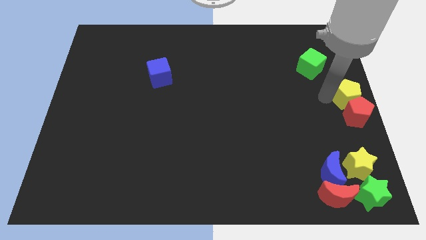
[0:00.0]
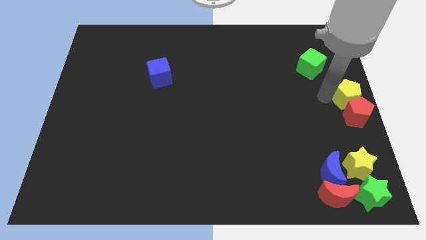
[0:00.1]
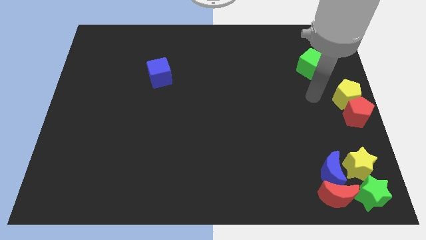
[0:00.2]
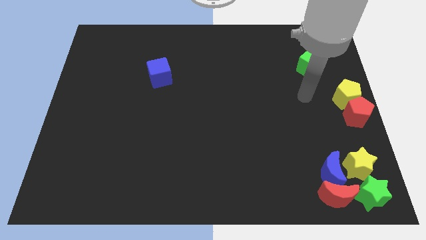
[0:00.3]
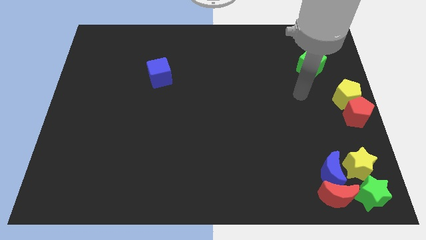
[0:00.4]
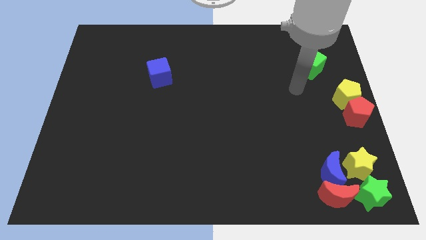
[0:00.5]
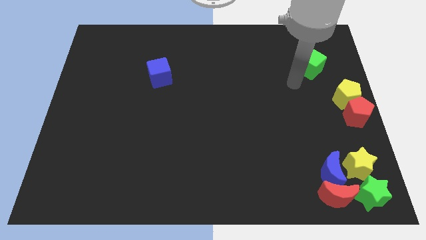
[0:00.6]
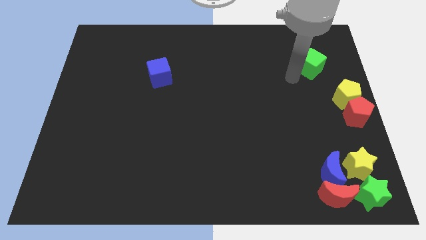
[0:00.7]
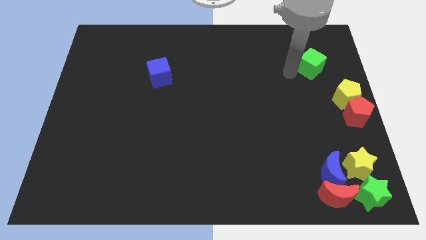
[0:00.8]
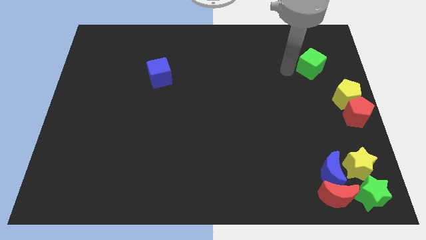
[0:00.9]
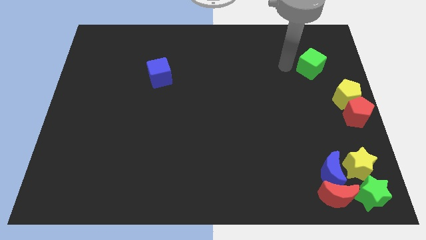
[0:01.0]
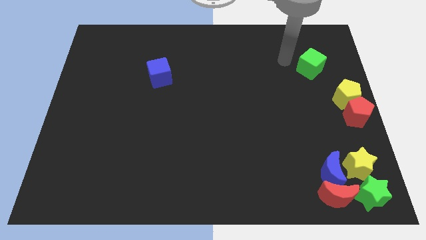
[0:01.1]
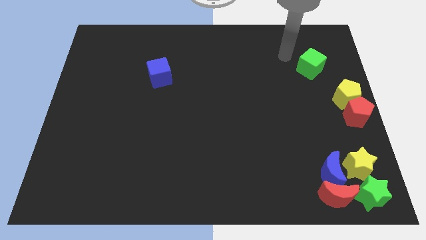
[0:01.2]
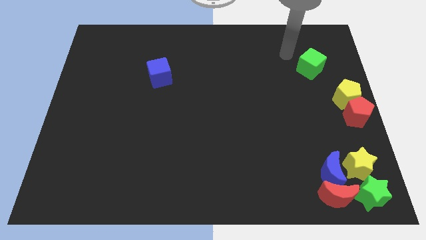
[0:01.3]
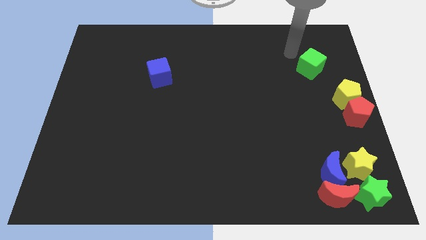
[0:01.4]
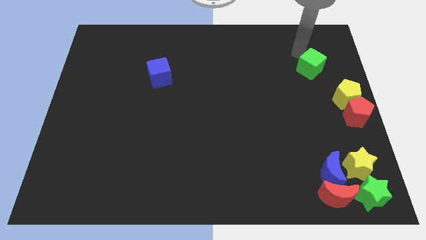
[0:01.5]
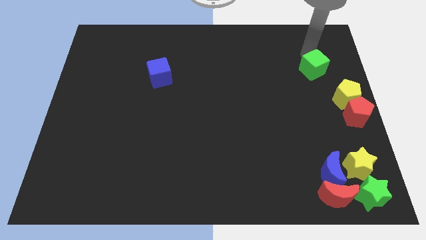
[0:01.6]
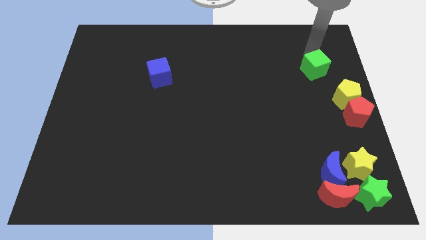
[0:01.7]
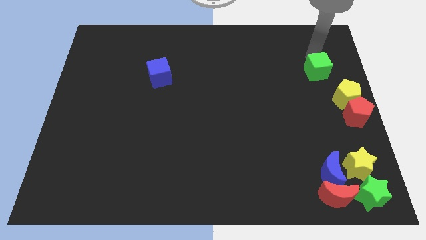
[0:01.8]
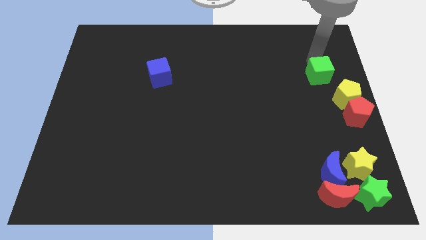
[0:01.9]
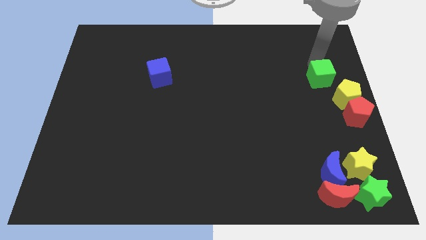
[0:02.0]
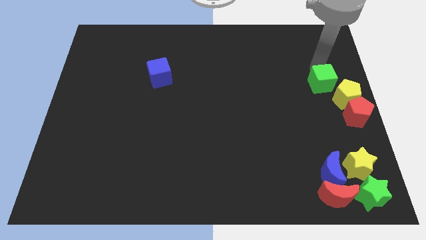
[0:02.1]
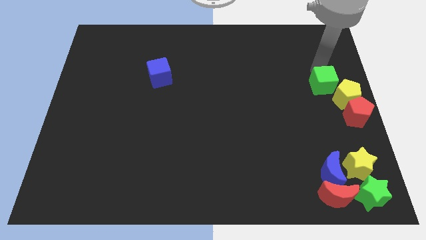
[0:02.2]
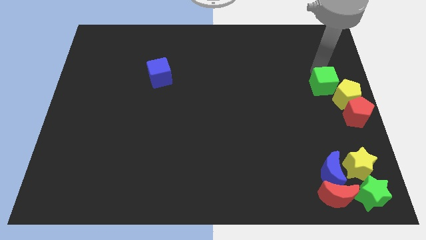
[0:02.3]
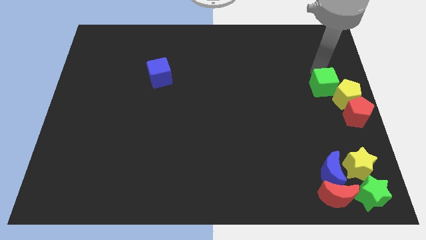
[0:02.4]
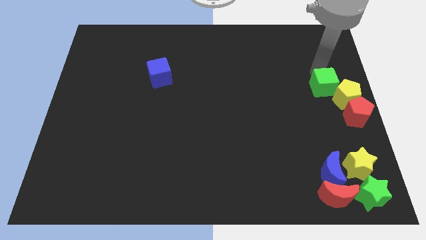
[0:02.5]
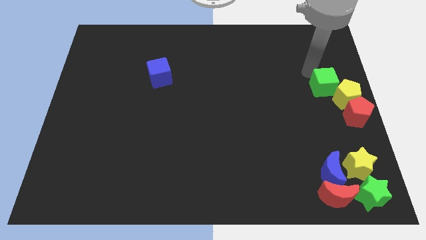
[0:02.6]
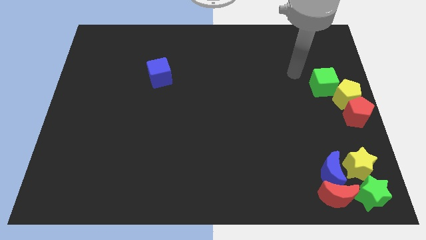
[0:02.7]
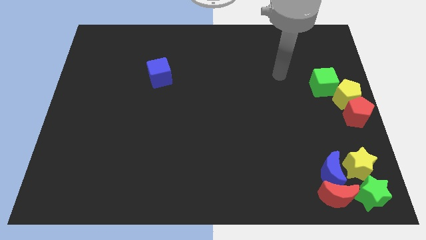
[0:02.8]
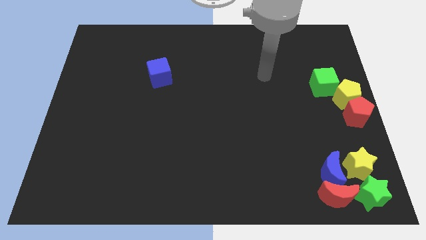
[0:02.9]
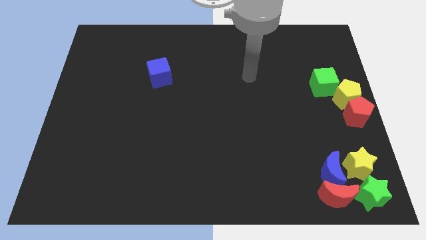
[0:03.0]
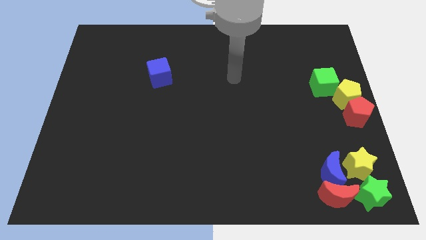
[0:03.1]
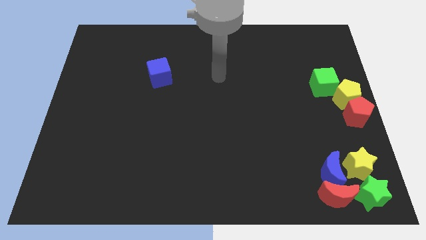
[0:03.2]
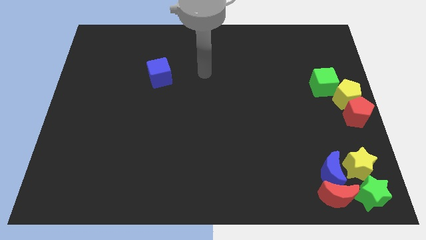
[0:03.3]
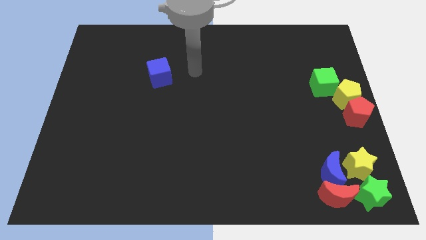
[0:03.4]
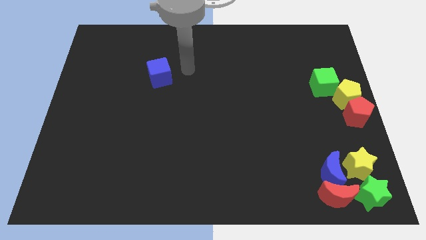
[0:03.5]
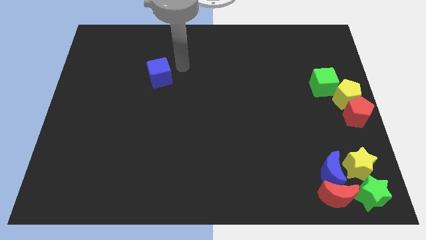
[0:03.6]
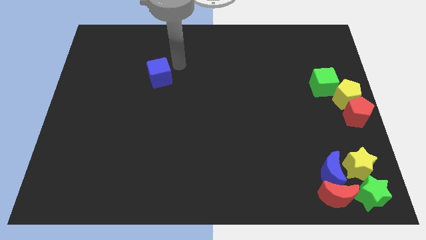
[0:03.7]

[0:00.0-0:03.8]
move the green cube to the top left of the yellow pentagon

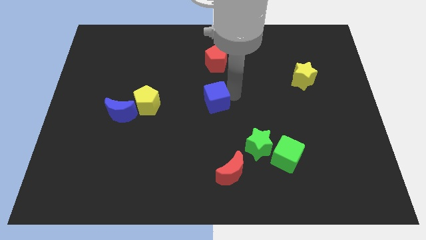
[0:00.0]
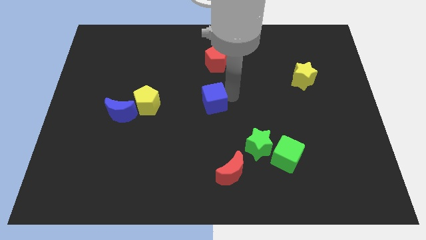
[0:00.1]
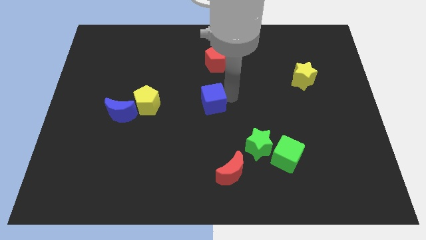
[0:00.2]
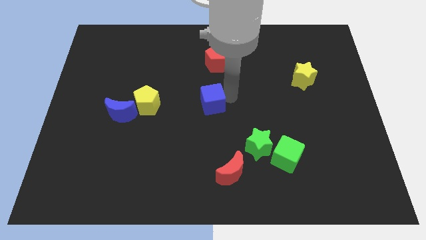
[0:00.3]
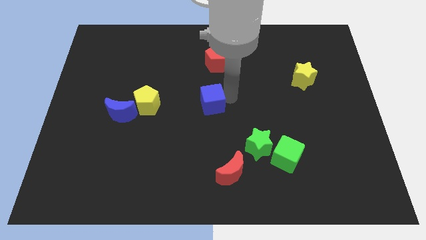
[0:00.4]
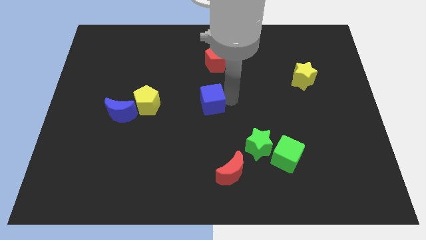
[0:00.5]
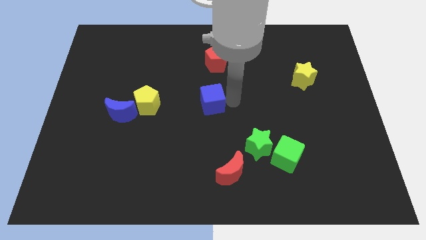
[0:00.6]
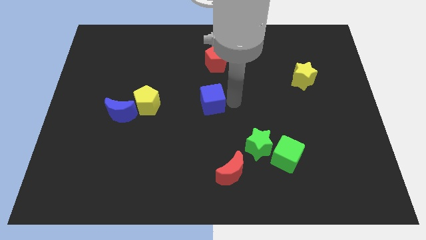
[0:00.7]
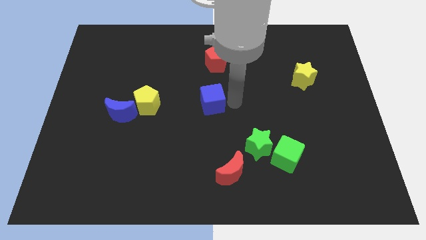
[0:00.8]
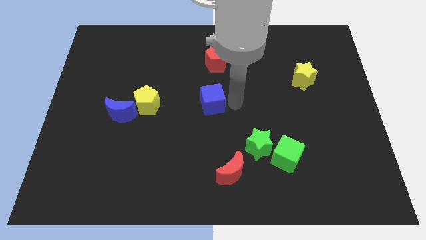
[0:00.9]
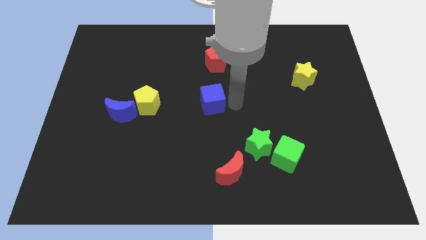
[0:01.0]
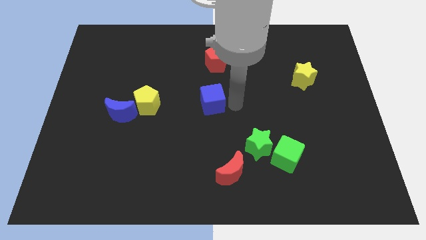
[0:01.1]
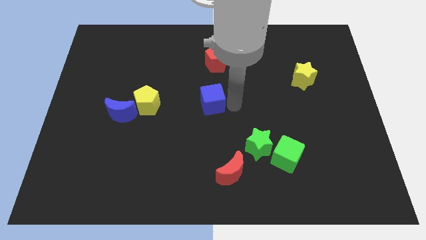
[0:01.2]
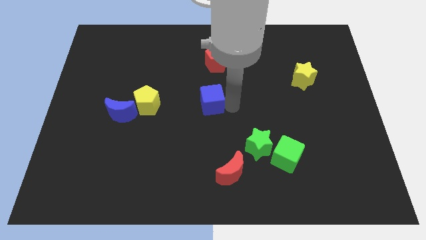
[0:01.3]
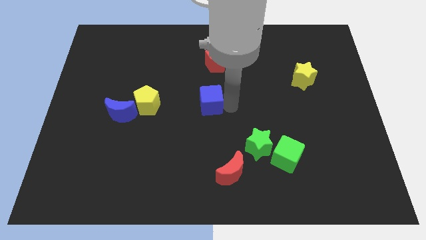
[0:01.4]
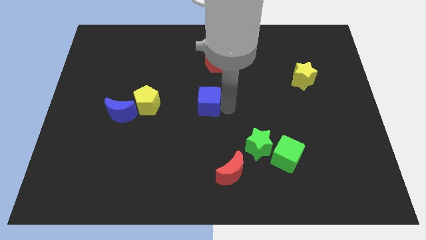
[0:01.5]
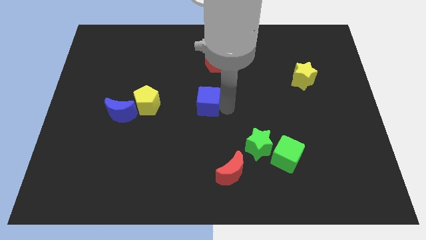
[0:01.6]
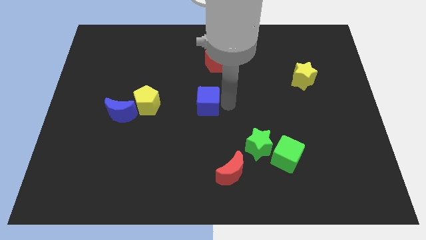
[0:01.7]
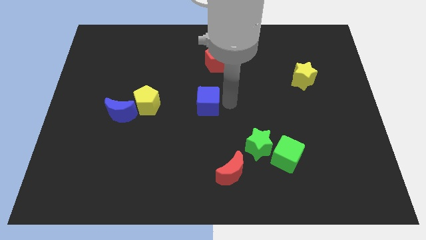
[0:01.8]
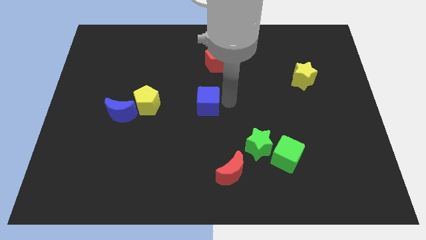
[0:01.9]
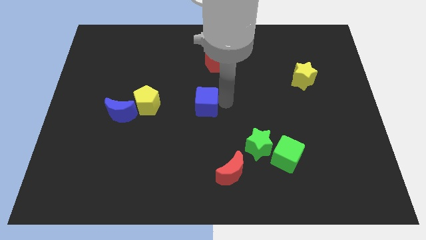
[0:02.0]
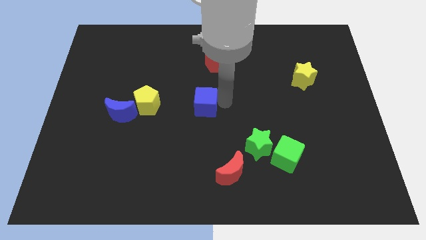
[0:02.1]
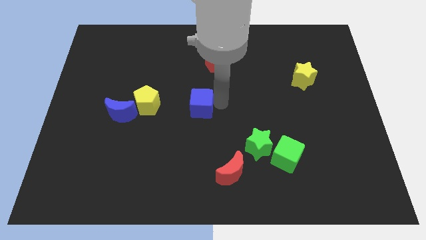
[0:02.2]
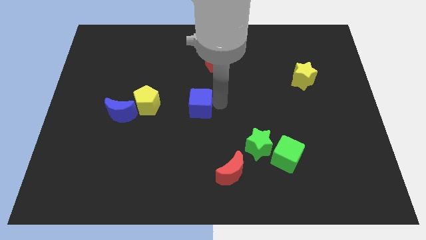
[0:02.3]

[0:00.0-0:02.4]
push the blue cube slightly to the right of the yellow pentagon

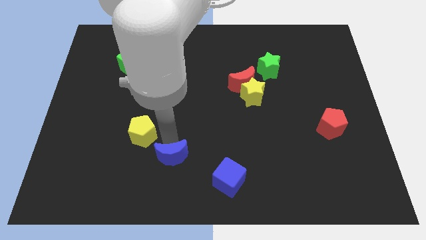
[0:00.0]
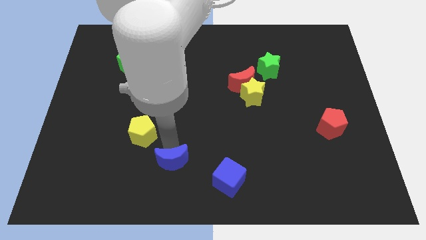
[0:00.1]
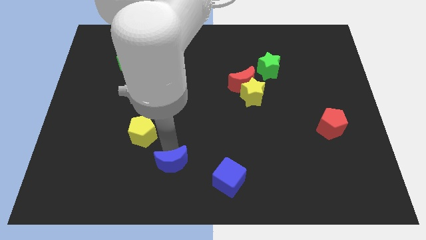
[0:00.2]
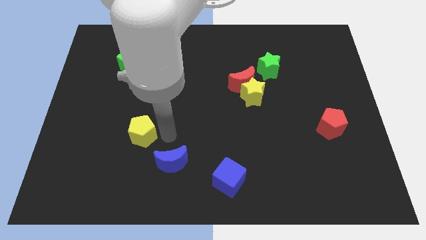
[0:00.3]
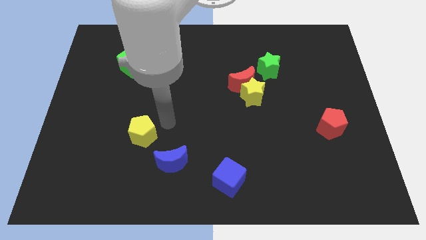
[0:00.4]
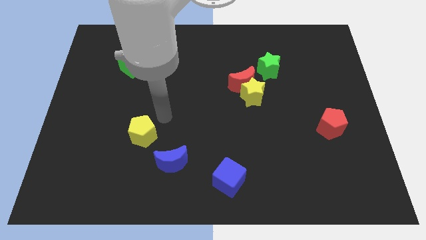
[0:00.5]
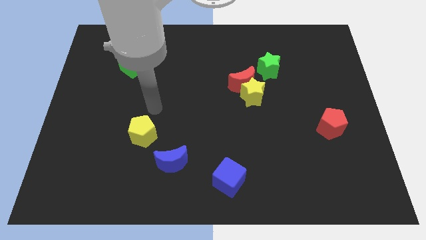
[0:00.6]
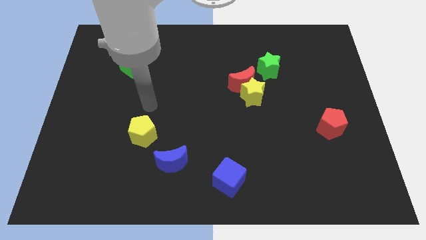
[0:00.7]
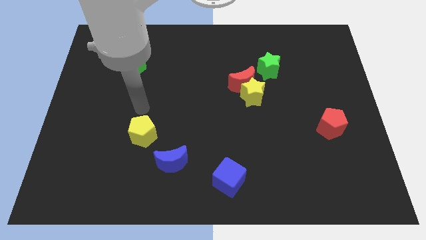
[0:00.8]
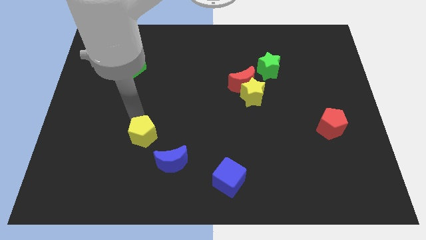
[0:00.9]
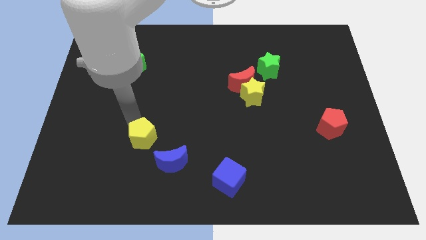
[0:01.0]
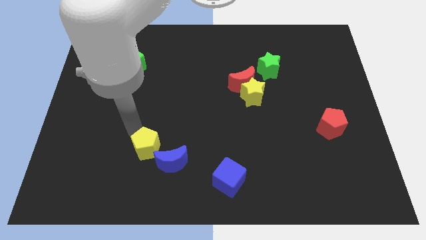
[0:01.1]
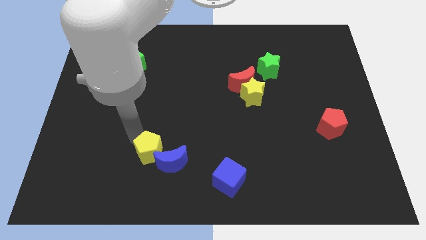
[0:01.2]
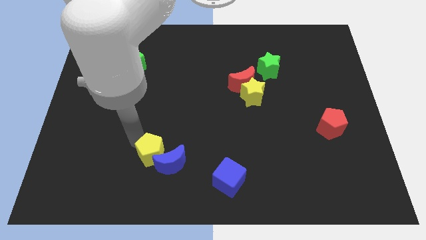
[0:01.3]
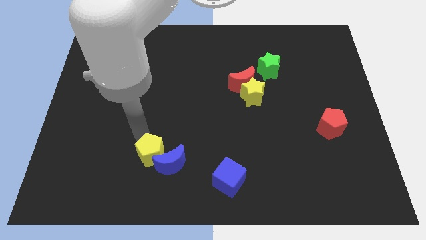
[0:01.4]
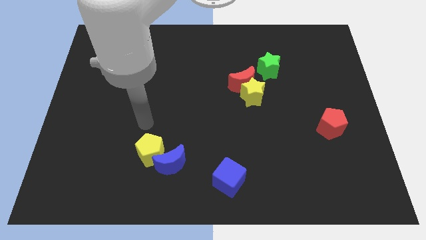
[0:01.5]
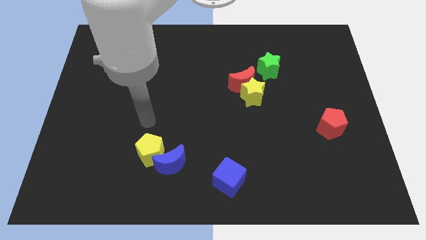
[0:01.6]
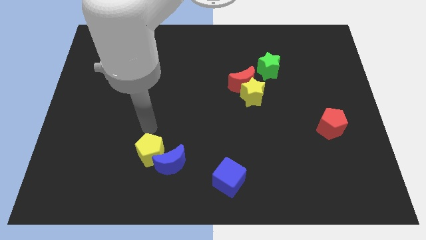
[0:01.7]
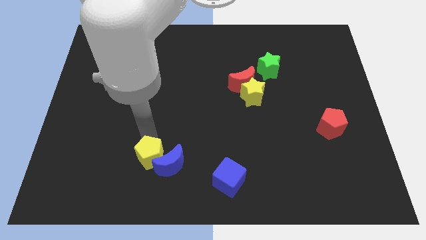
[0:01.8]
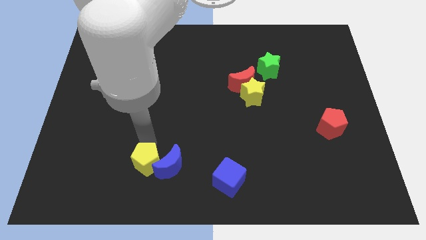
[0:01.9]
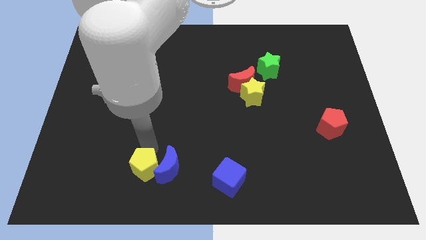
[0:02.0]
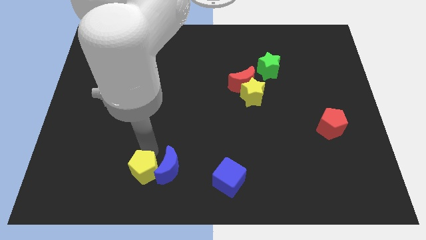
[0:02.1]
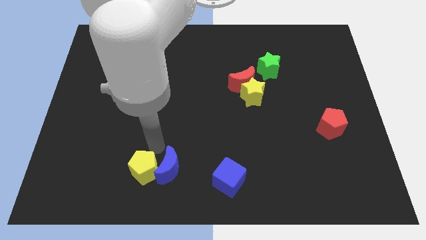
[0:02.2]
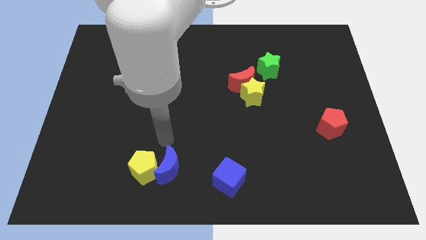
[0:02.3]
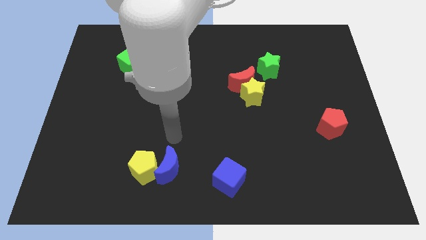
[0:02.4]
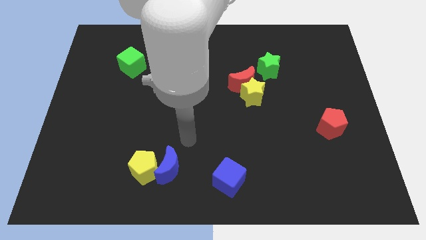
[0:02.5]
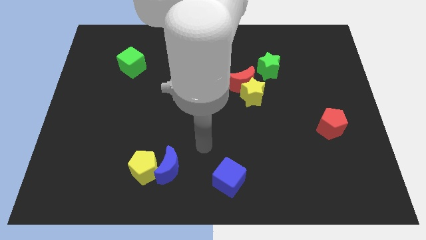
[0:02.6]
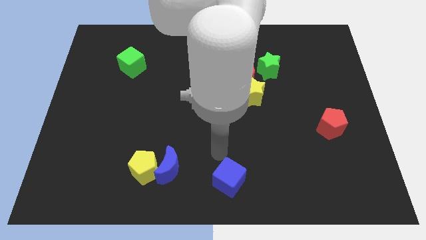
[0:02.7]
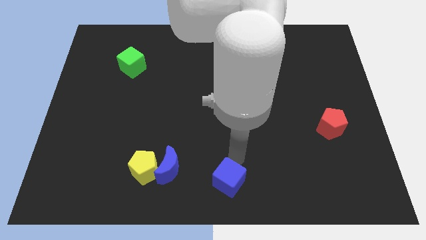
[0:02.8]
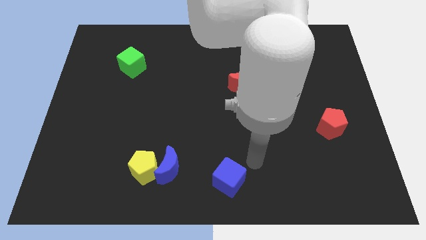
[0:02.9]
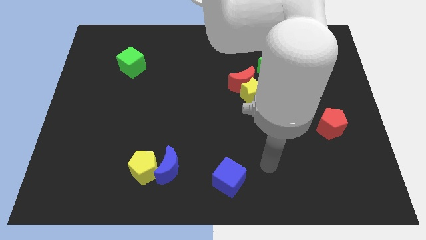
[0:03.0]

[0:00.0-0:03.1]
move yellow pentagon close to the blue moon
